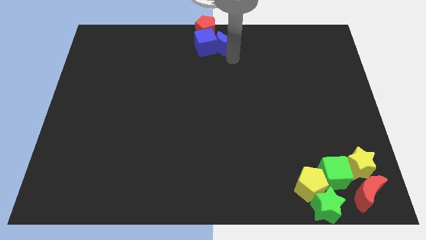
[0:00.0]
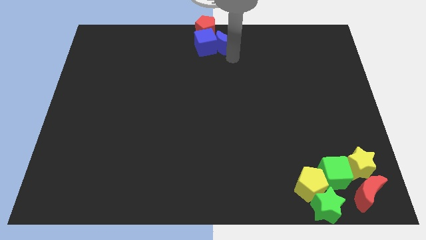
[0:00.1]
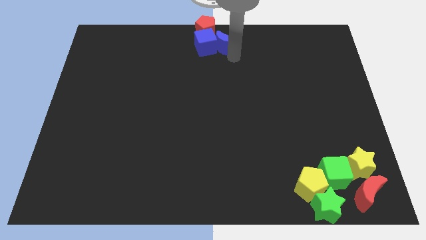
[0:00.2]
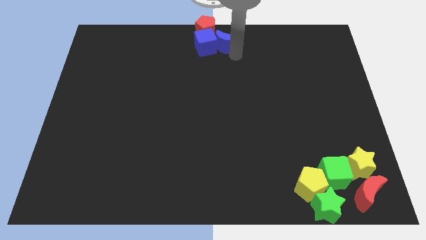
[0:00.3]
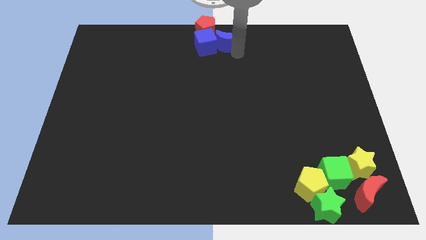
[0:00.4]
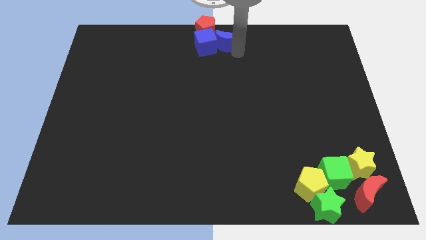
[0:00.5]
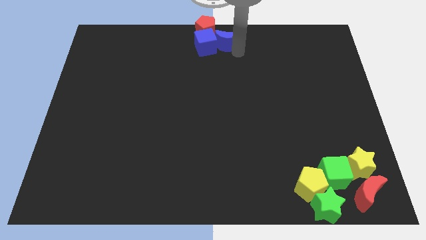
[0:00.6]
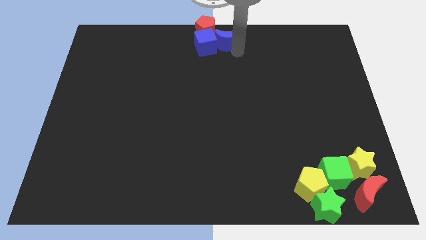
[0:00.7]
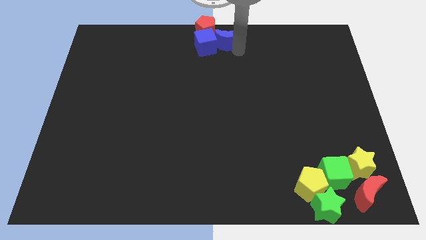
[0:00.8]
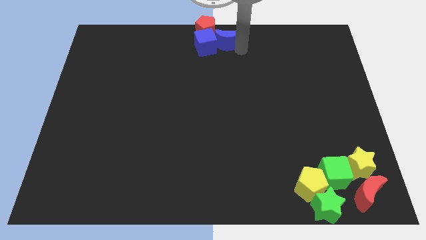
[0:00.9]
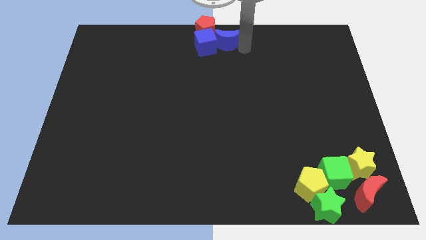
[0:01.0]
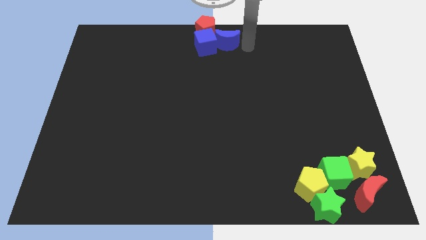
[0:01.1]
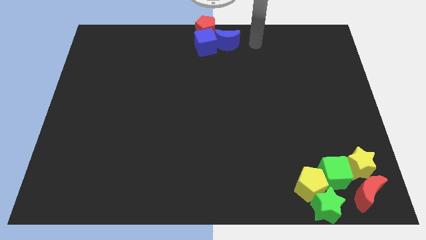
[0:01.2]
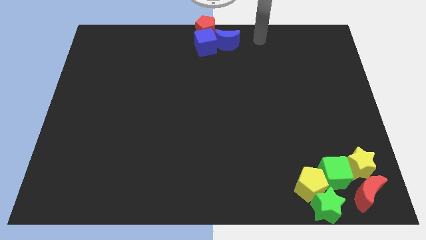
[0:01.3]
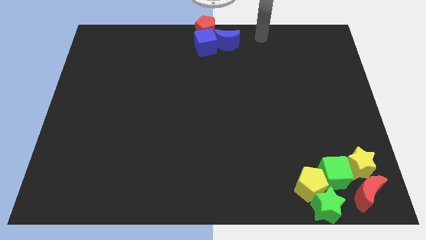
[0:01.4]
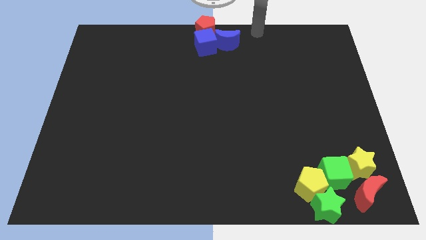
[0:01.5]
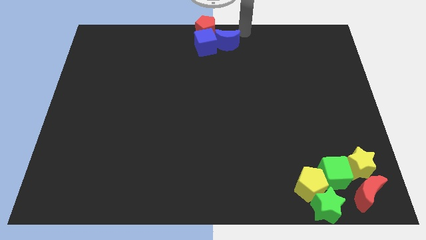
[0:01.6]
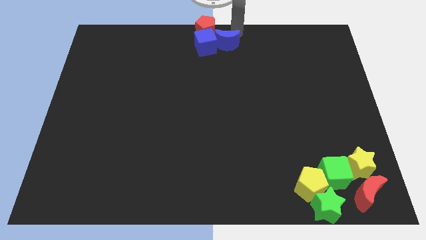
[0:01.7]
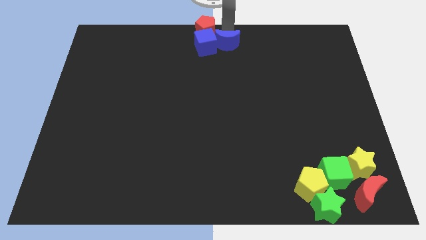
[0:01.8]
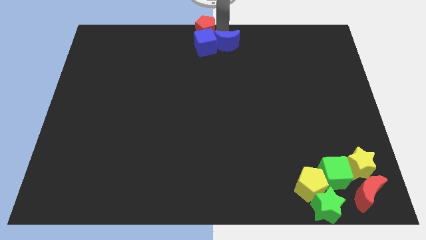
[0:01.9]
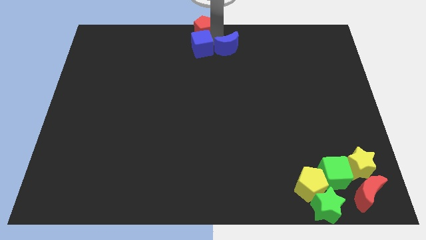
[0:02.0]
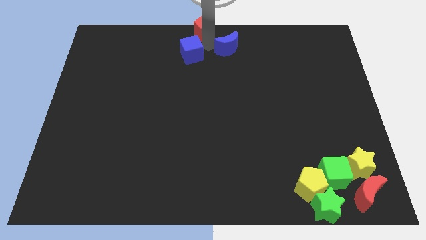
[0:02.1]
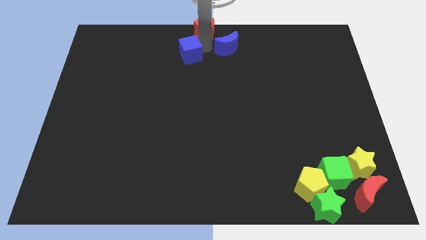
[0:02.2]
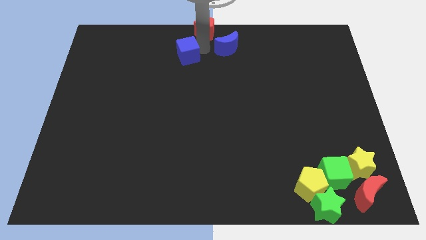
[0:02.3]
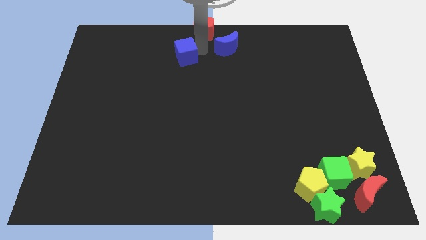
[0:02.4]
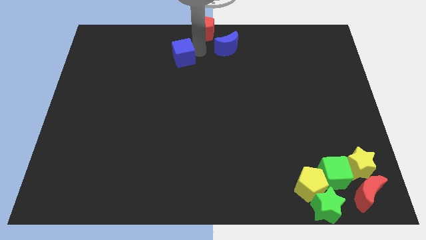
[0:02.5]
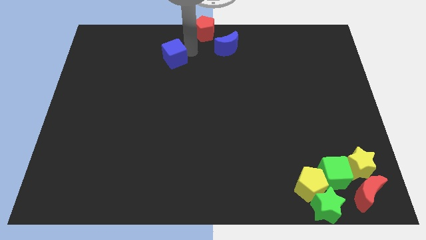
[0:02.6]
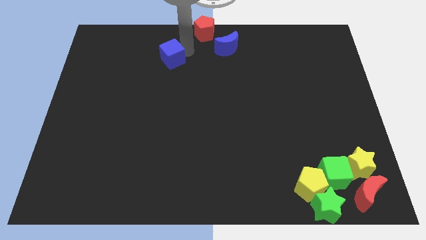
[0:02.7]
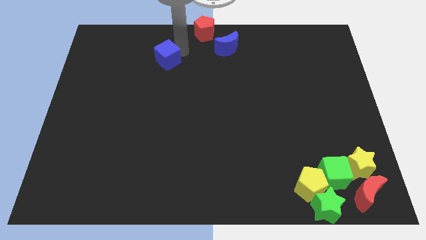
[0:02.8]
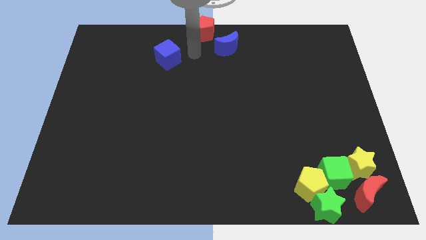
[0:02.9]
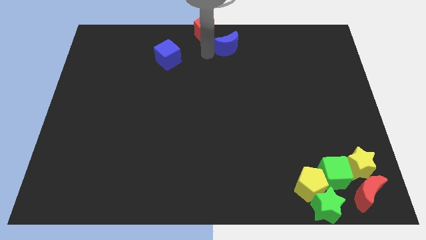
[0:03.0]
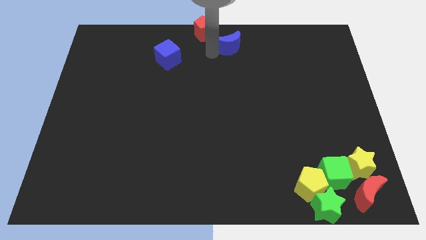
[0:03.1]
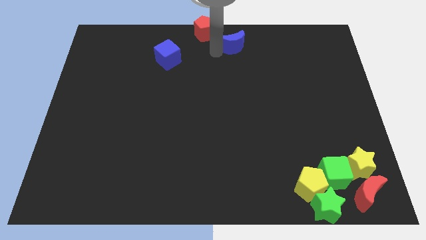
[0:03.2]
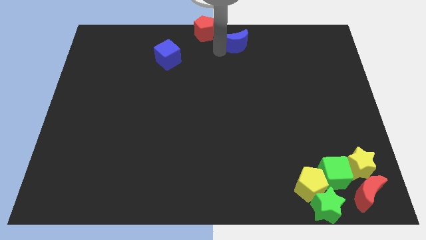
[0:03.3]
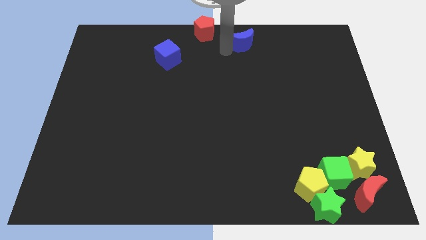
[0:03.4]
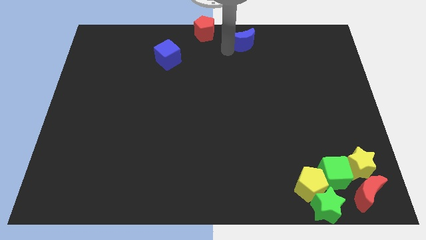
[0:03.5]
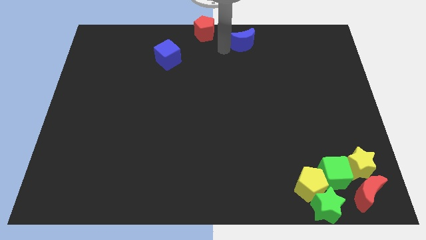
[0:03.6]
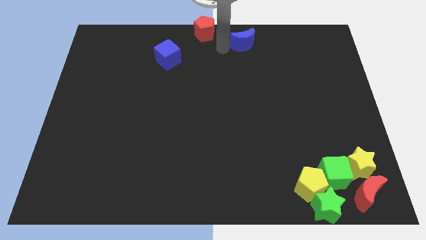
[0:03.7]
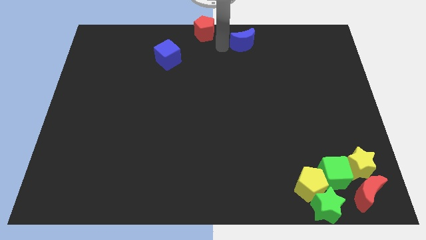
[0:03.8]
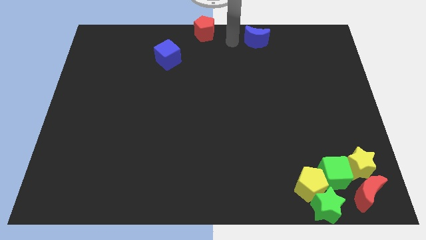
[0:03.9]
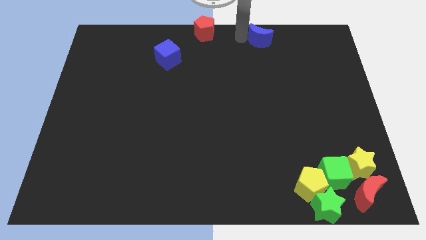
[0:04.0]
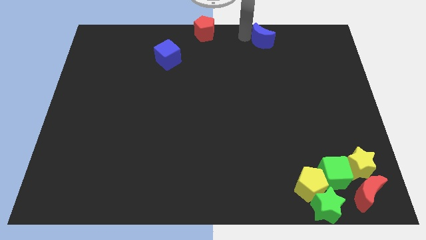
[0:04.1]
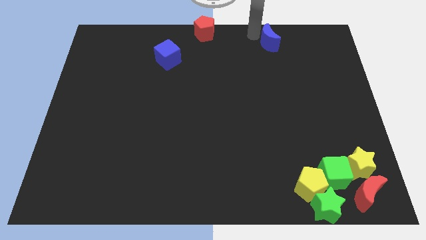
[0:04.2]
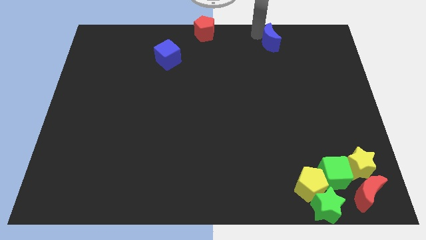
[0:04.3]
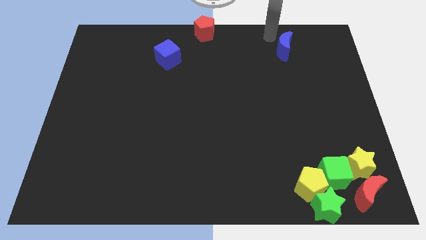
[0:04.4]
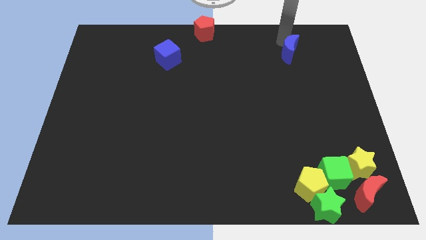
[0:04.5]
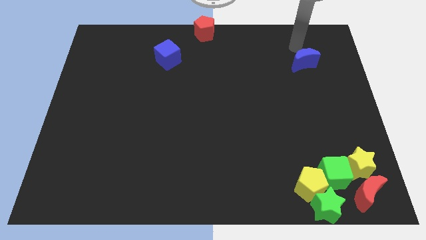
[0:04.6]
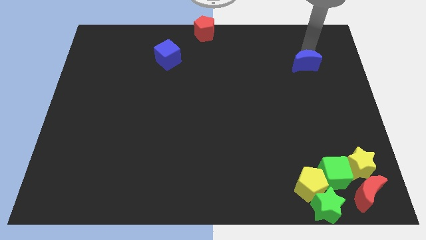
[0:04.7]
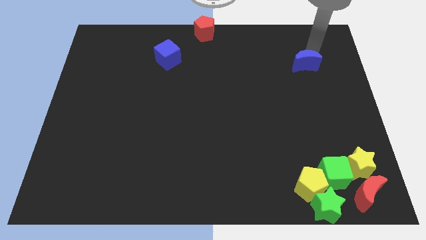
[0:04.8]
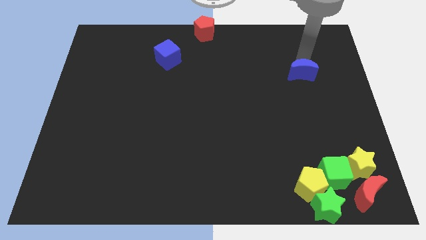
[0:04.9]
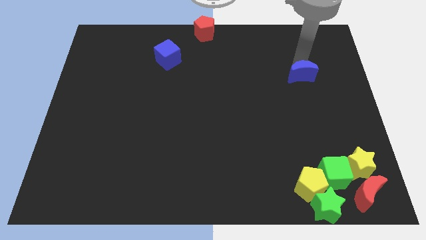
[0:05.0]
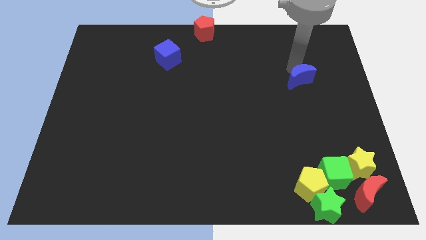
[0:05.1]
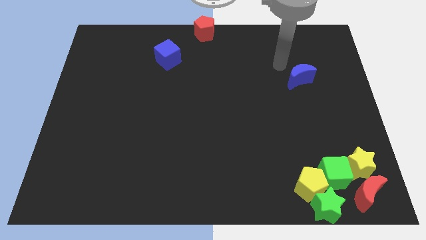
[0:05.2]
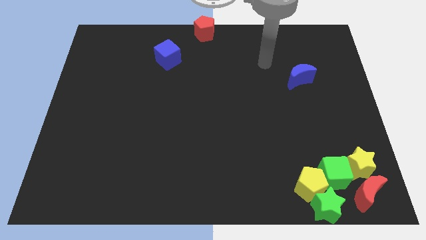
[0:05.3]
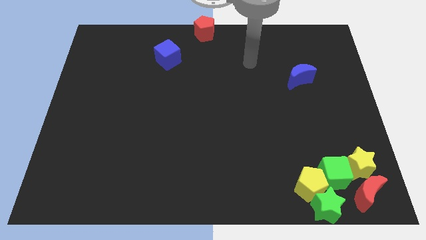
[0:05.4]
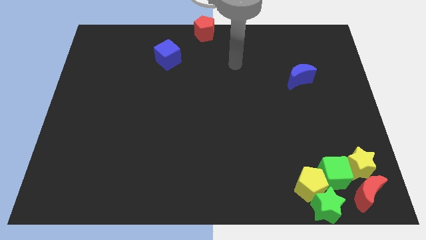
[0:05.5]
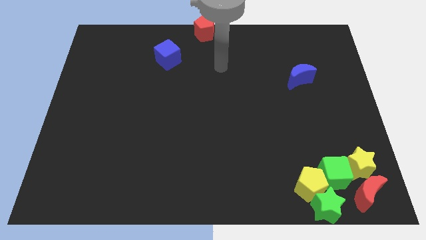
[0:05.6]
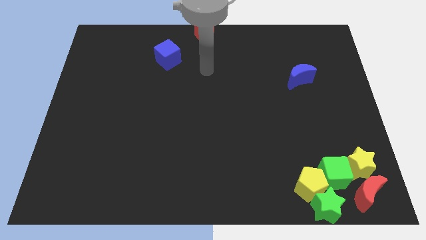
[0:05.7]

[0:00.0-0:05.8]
separate the blue crescent from the red pentagon

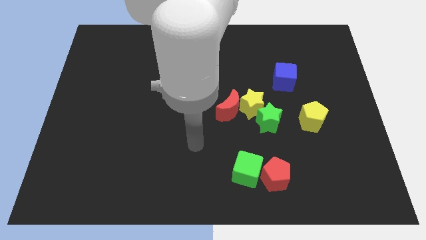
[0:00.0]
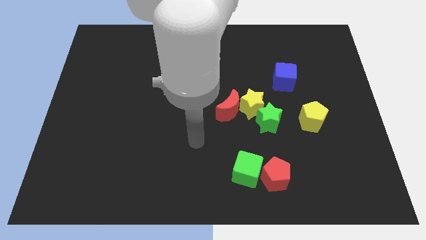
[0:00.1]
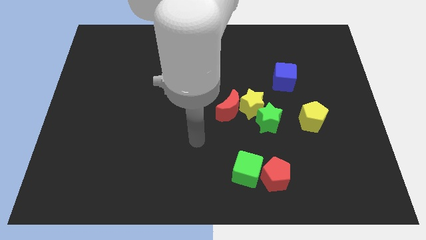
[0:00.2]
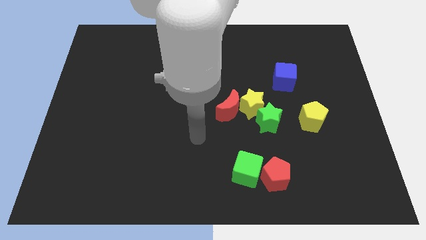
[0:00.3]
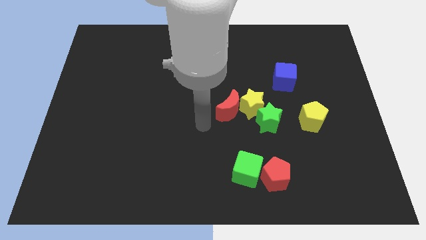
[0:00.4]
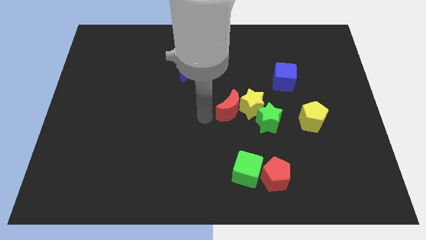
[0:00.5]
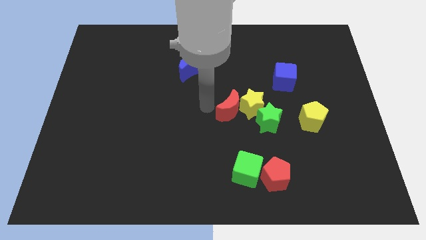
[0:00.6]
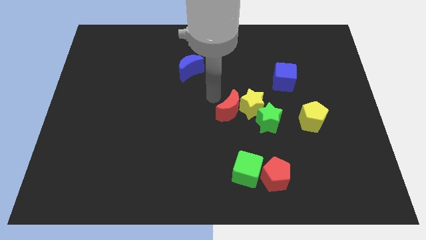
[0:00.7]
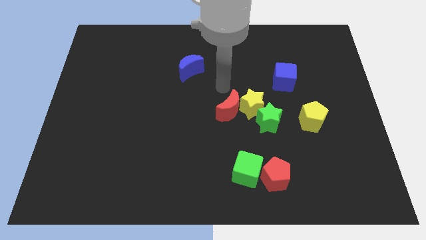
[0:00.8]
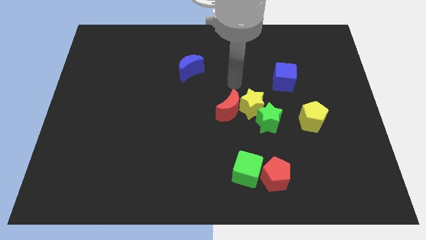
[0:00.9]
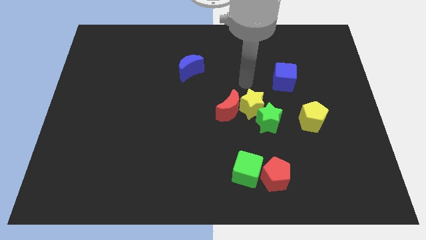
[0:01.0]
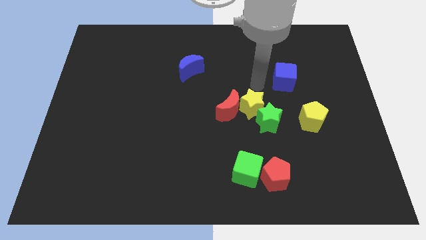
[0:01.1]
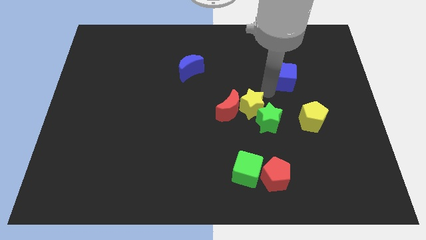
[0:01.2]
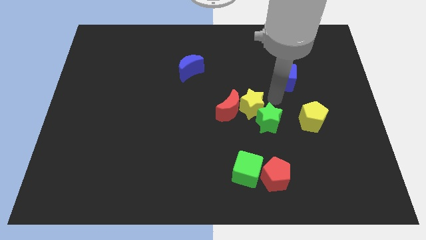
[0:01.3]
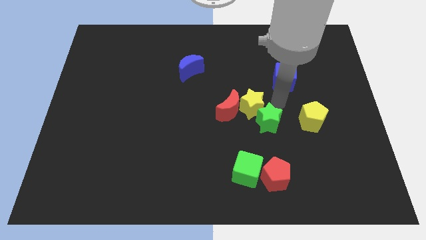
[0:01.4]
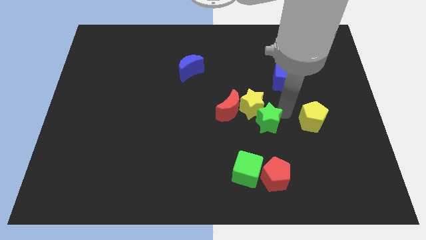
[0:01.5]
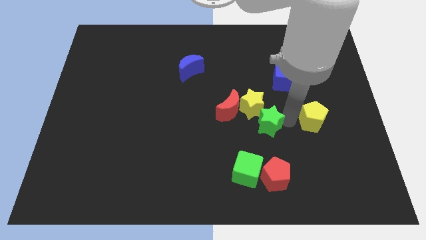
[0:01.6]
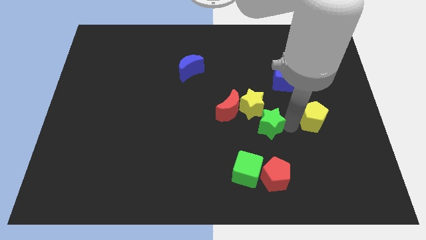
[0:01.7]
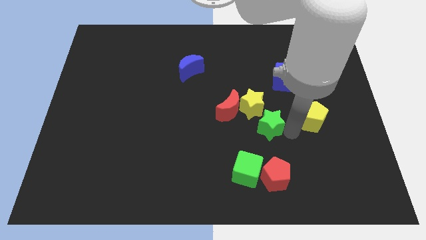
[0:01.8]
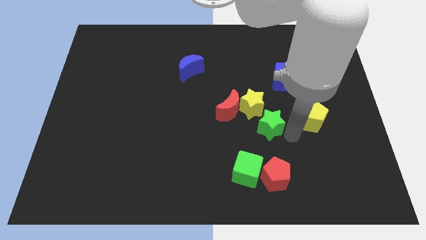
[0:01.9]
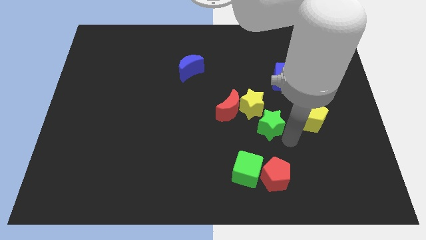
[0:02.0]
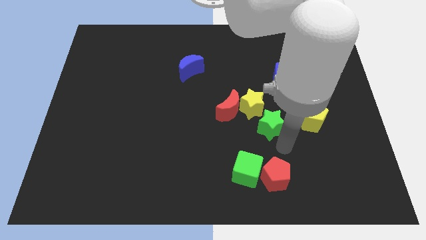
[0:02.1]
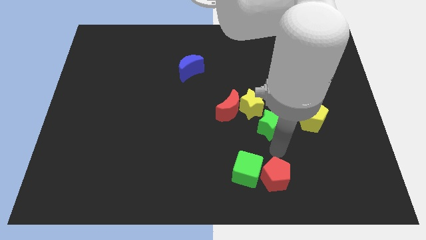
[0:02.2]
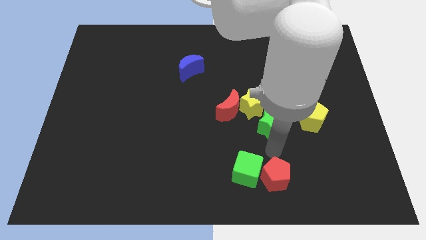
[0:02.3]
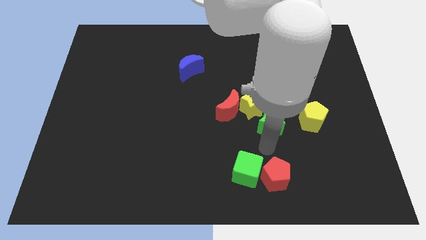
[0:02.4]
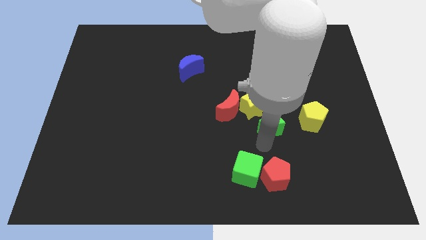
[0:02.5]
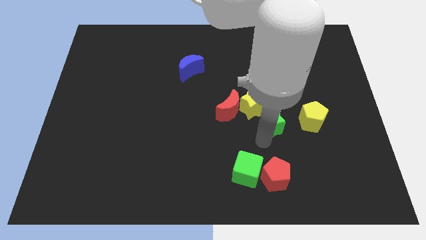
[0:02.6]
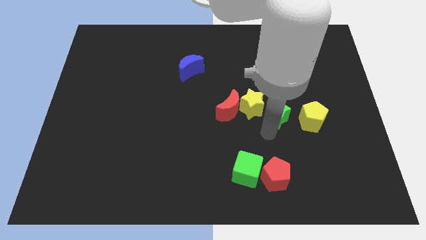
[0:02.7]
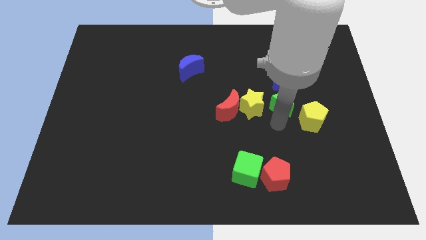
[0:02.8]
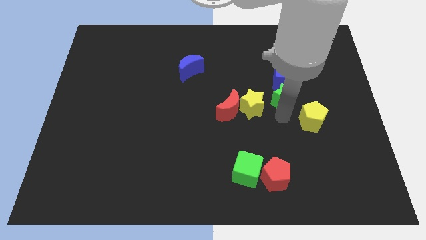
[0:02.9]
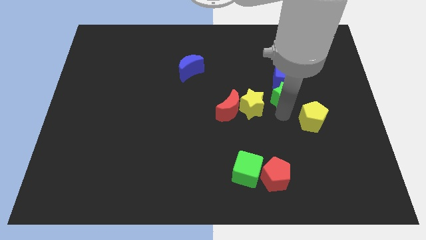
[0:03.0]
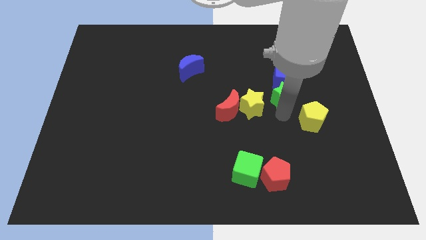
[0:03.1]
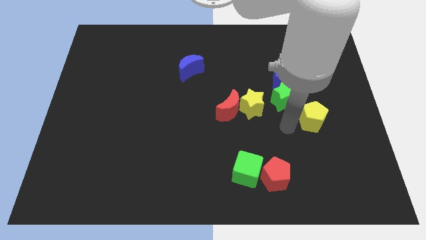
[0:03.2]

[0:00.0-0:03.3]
move the green star into the blue cube
